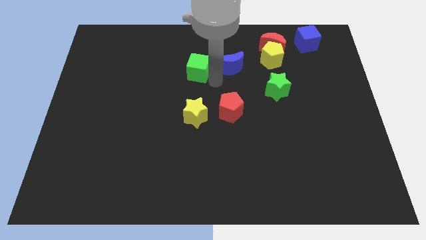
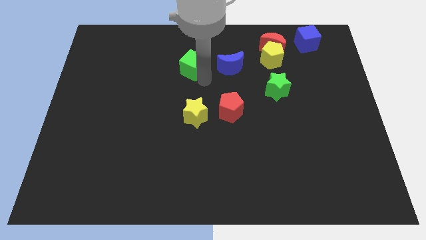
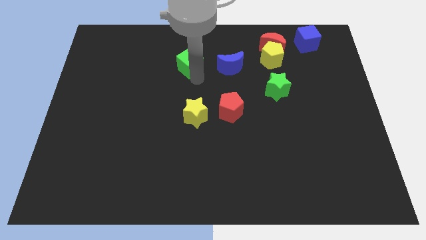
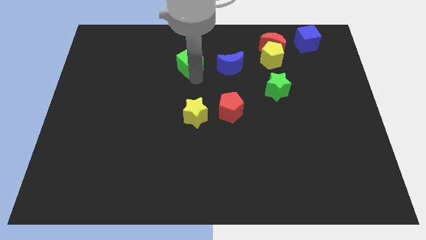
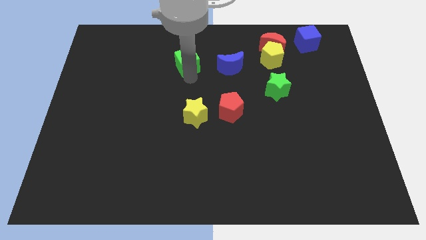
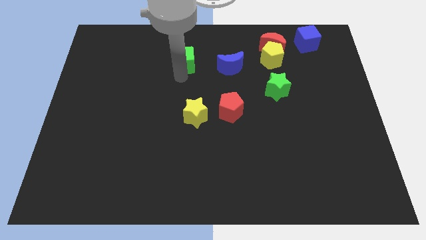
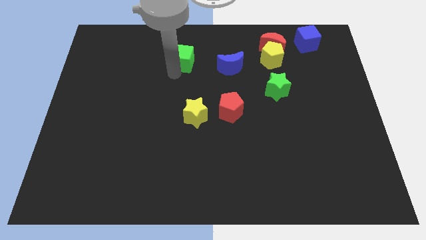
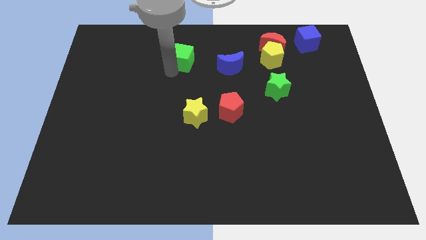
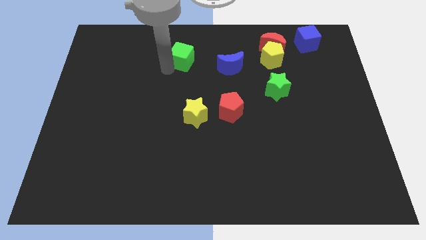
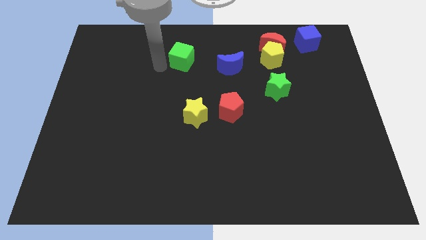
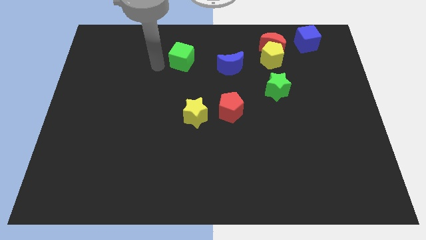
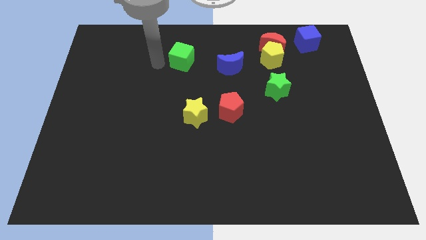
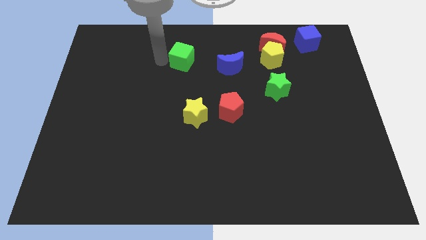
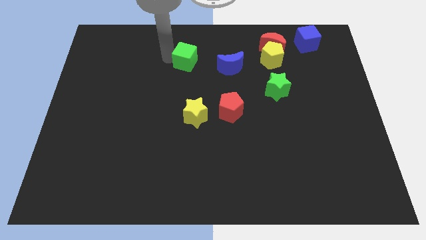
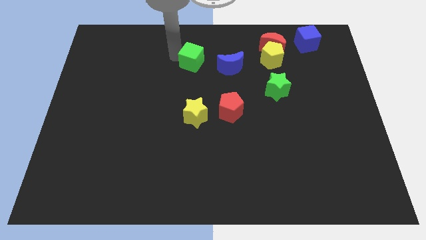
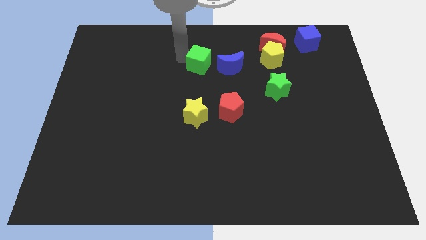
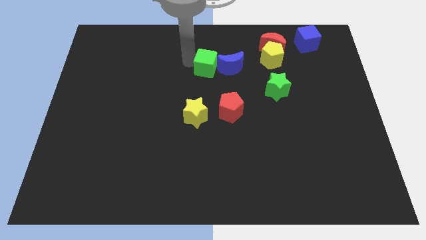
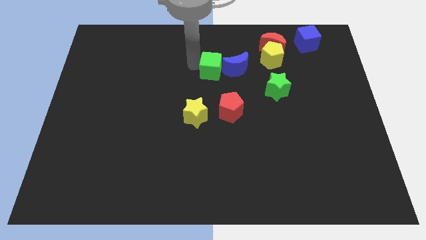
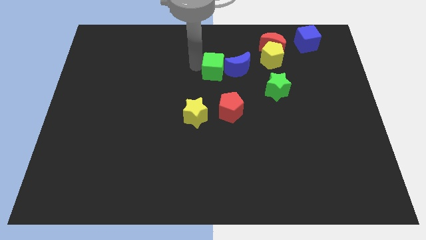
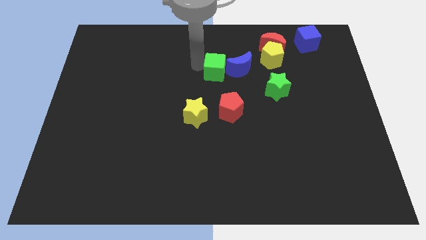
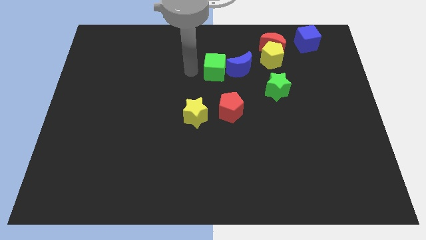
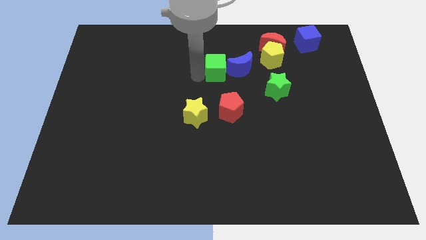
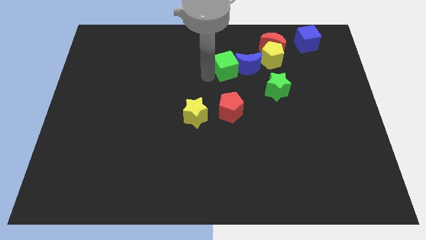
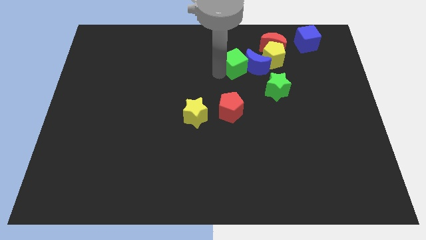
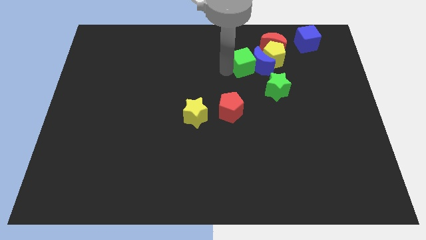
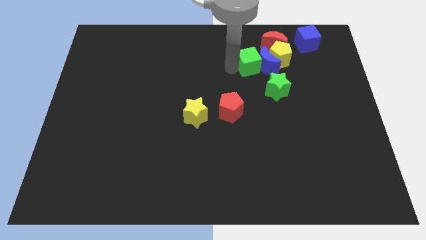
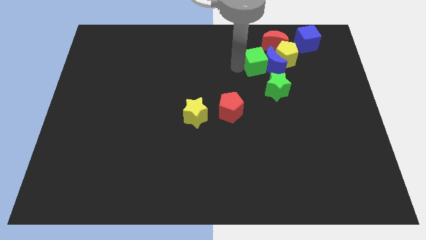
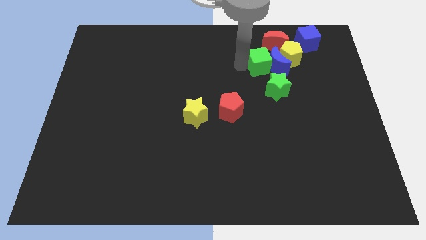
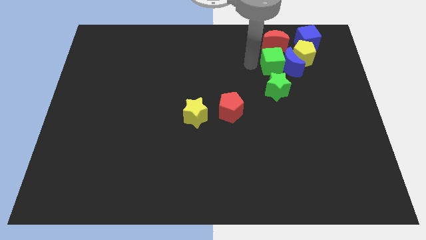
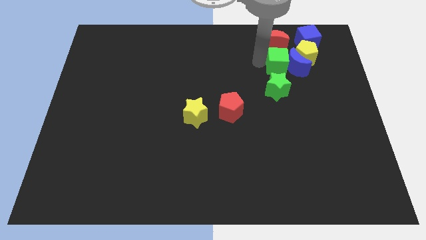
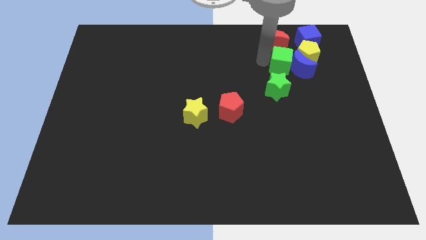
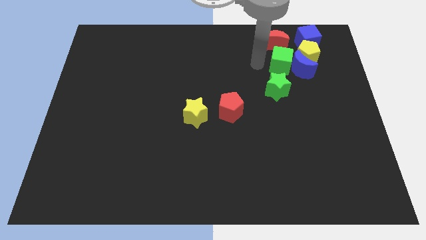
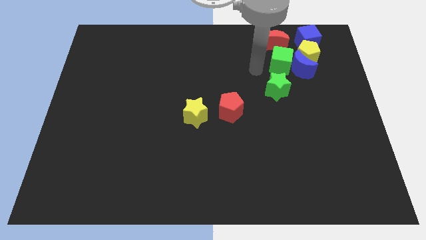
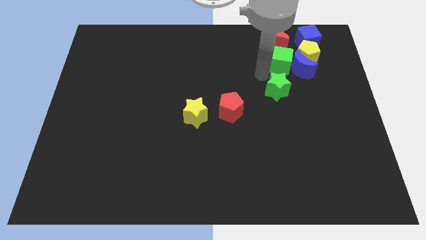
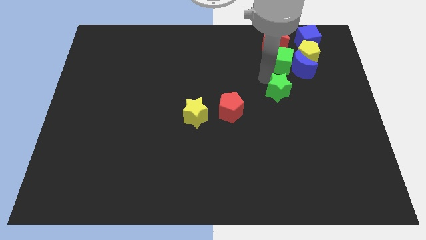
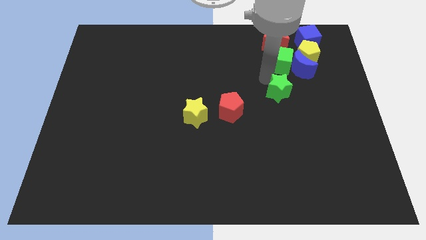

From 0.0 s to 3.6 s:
push the green cube into the group of blocks

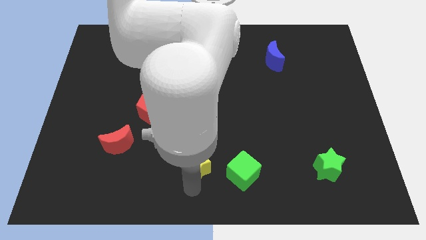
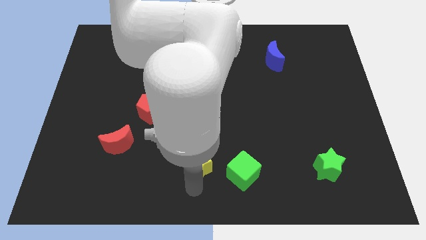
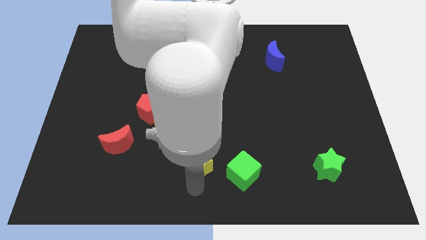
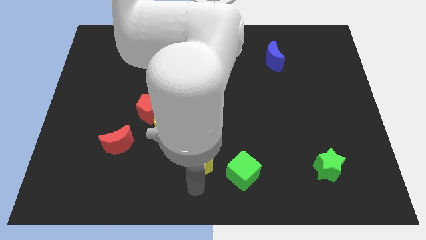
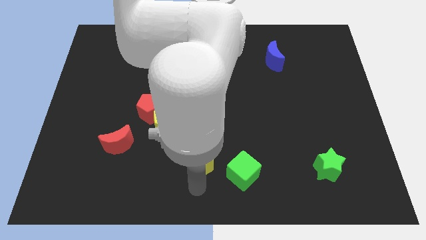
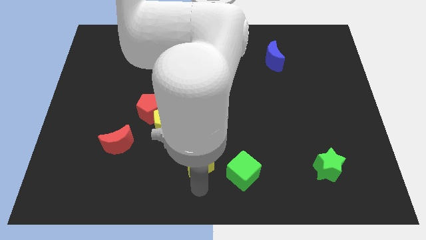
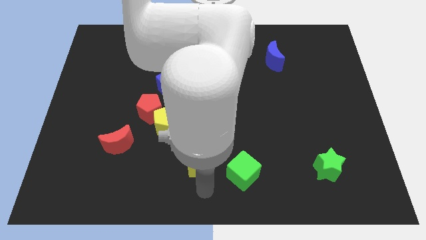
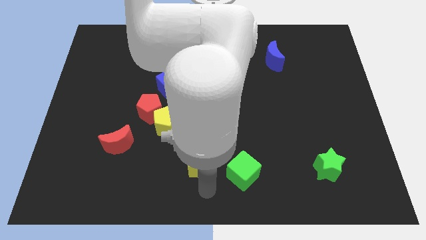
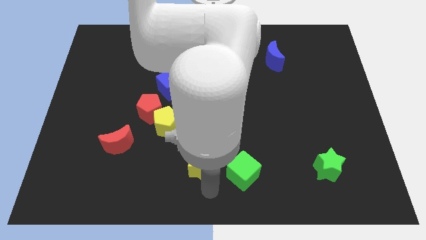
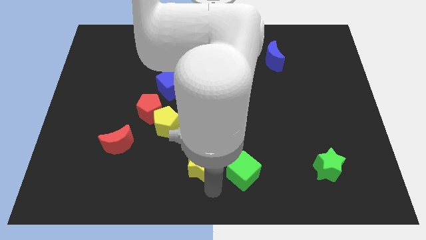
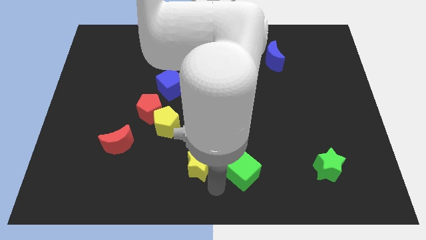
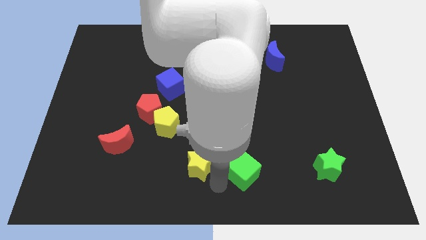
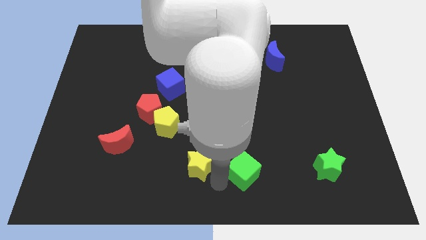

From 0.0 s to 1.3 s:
move your arm towards the green cube

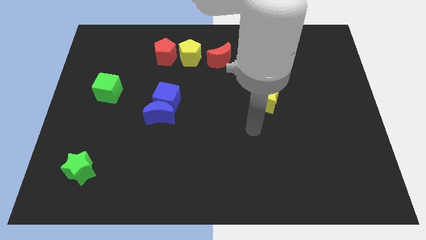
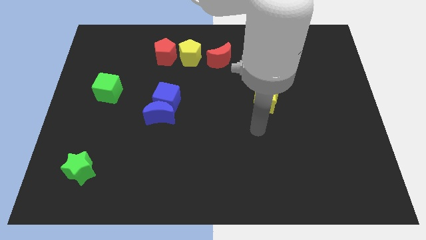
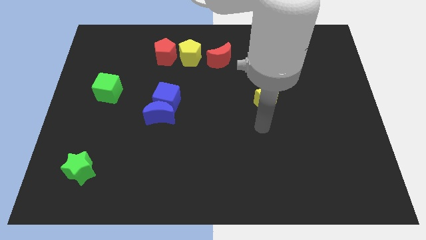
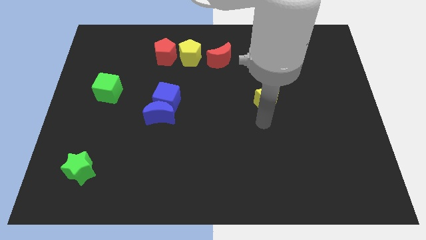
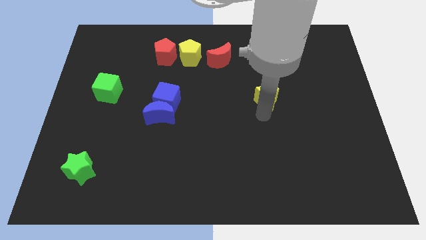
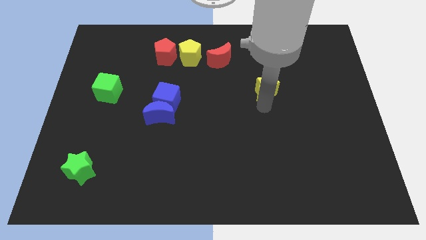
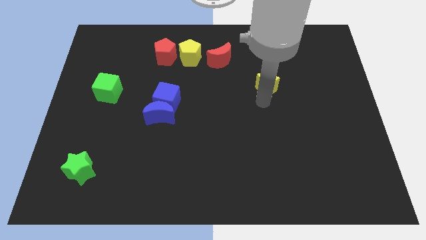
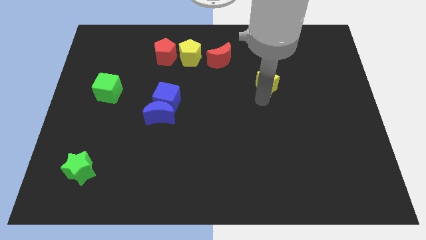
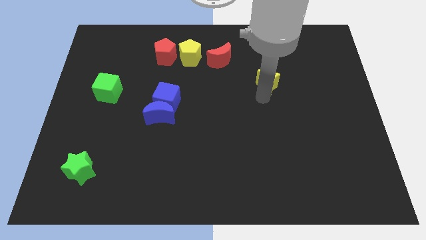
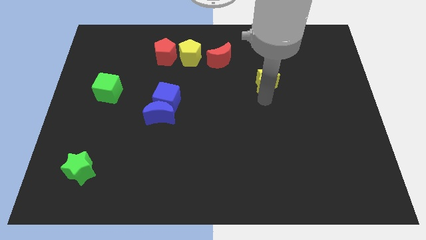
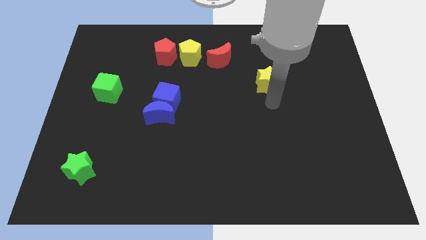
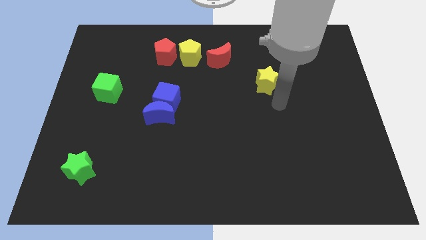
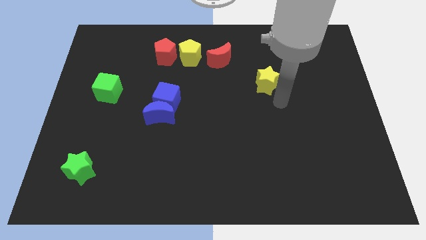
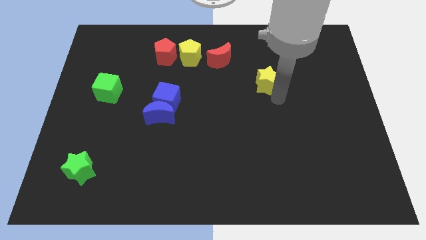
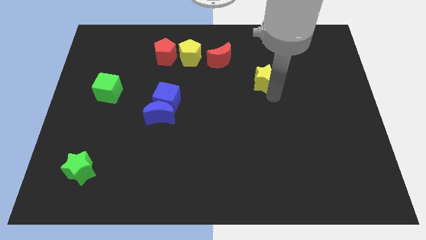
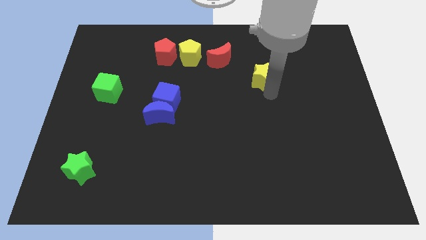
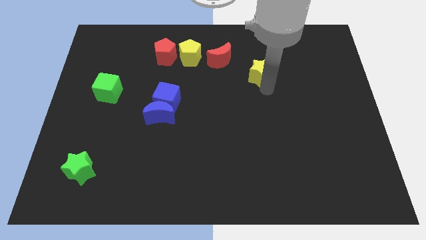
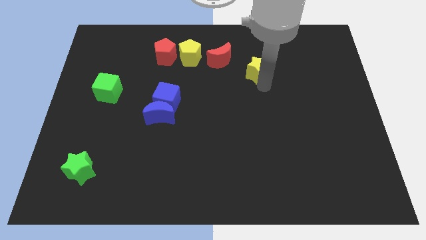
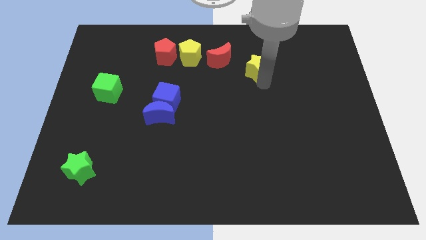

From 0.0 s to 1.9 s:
push the yellow star slightly towards up

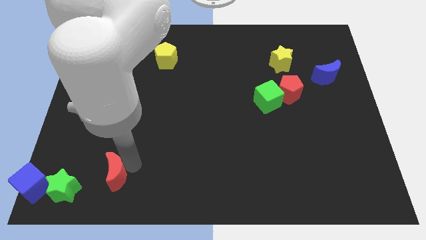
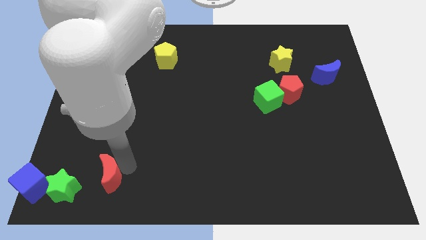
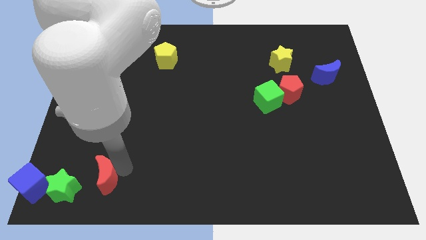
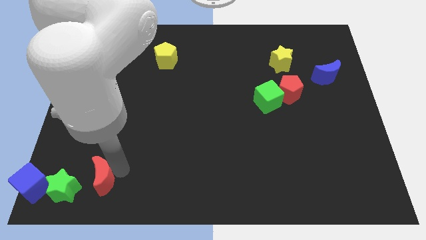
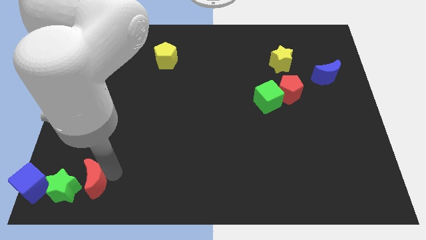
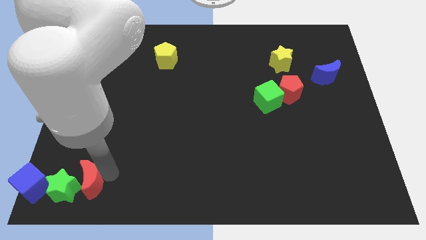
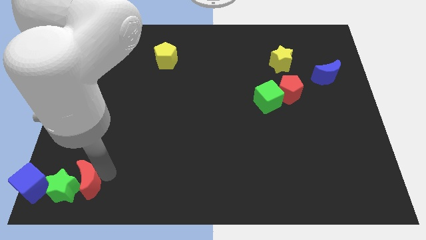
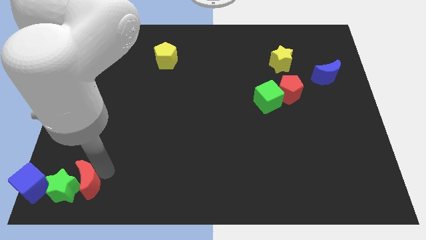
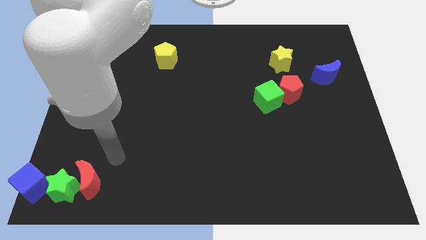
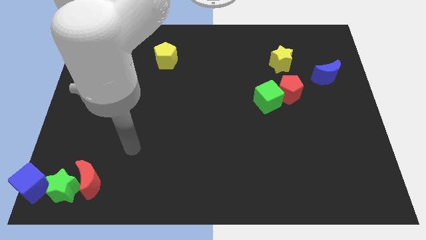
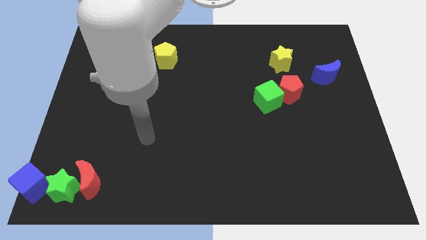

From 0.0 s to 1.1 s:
push red crescent into green star

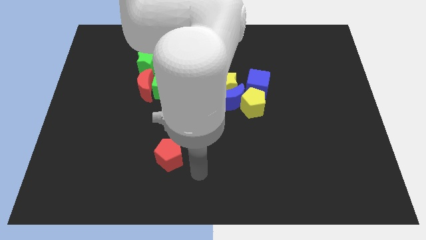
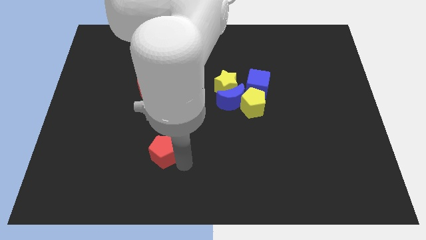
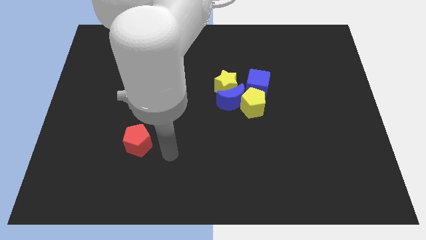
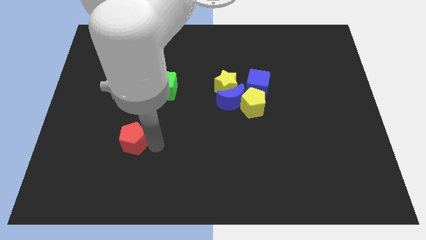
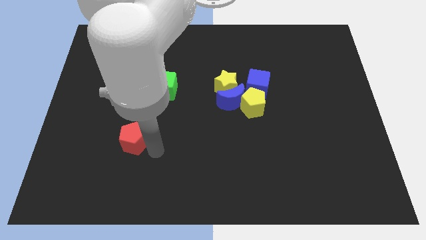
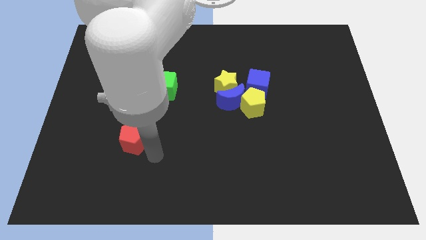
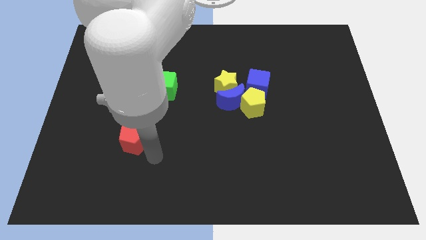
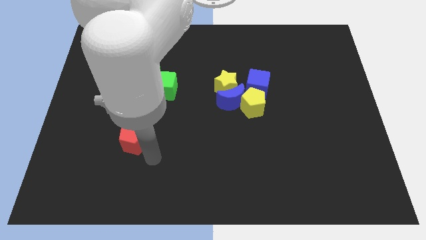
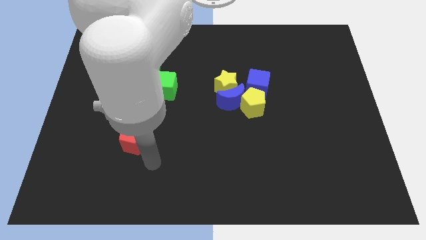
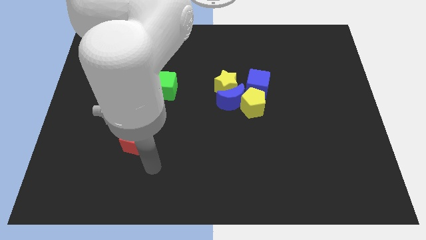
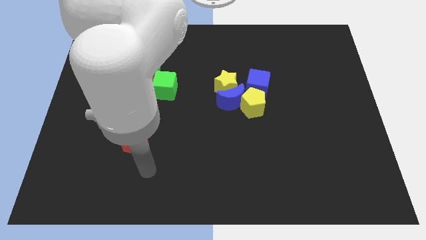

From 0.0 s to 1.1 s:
place the red pentagon below the red moon
